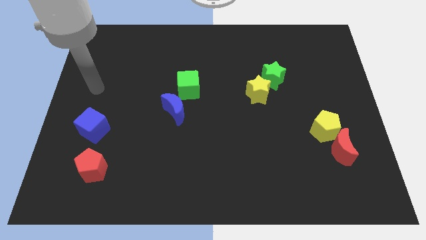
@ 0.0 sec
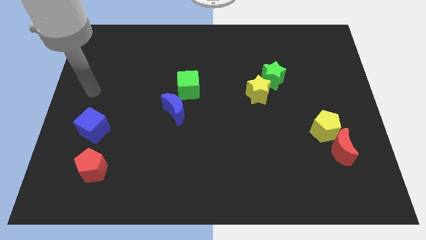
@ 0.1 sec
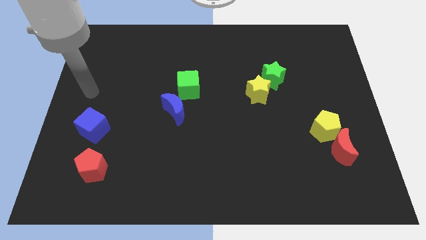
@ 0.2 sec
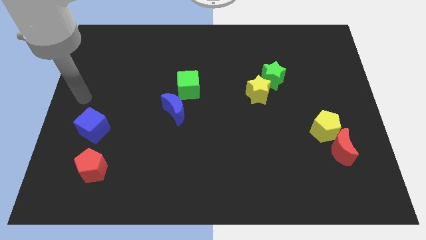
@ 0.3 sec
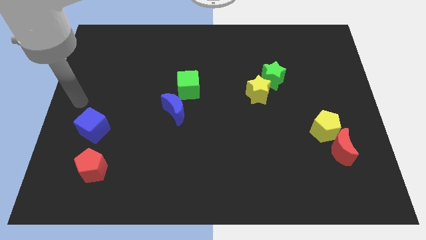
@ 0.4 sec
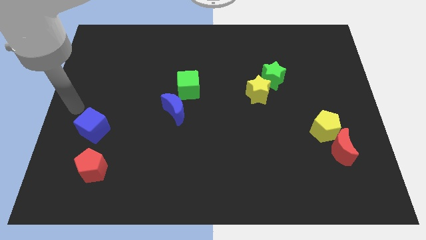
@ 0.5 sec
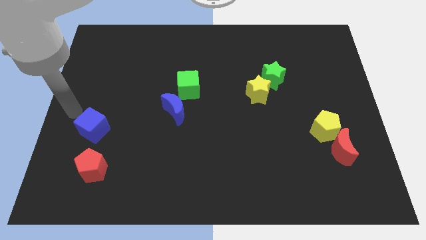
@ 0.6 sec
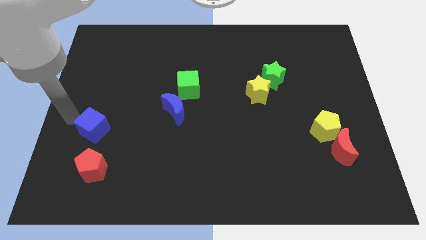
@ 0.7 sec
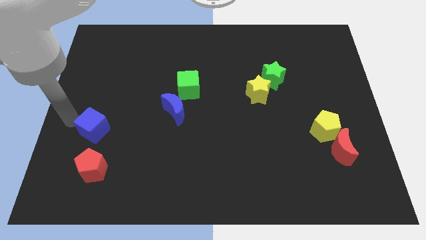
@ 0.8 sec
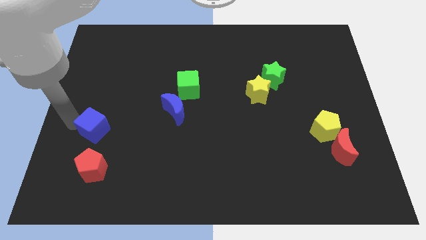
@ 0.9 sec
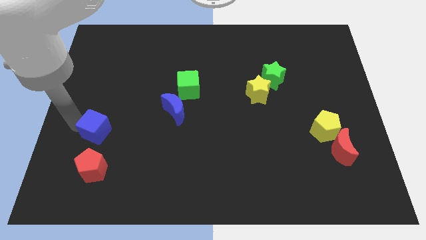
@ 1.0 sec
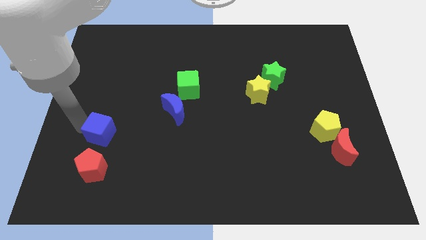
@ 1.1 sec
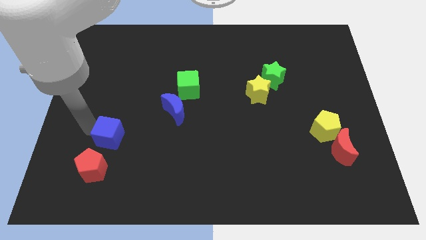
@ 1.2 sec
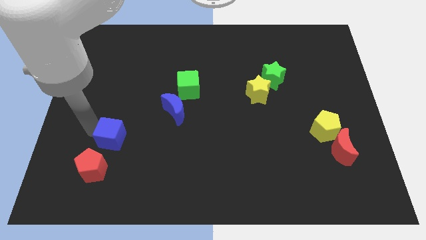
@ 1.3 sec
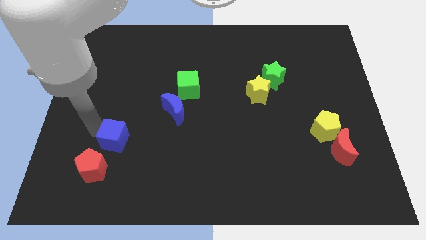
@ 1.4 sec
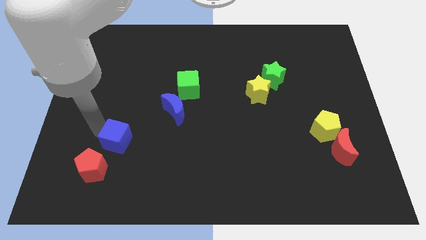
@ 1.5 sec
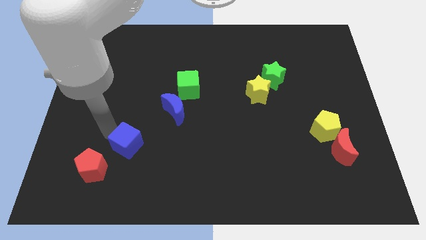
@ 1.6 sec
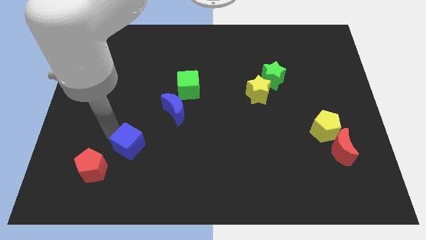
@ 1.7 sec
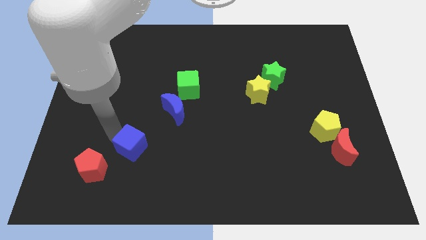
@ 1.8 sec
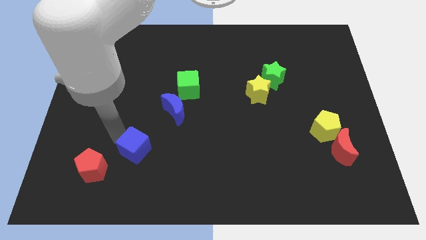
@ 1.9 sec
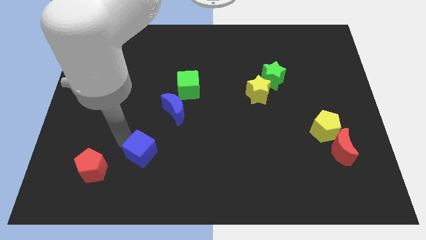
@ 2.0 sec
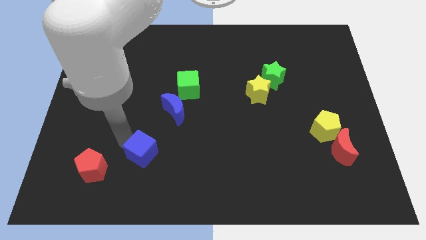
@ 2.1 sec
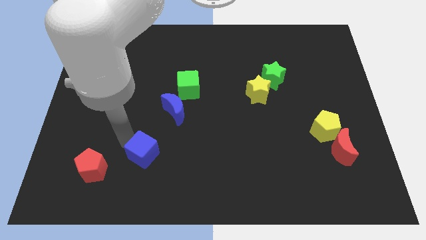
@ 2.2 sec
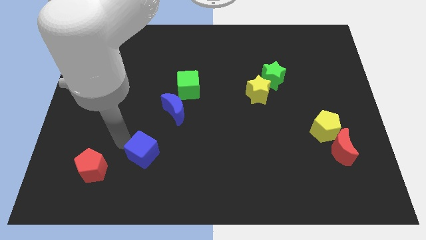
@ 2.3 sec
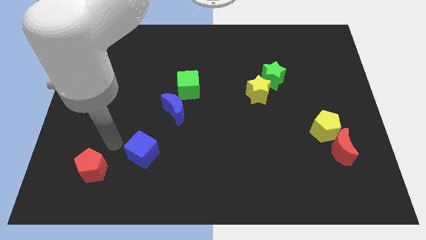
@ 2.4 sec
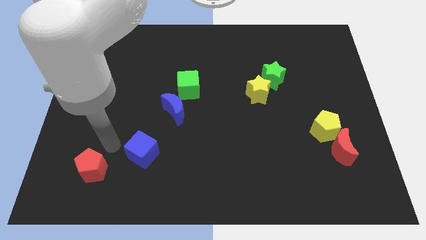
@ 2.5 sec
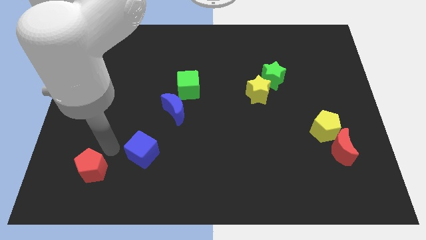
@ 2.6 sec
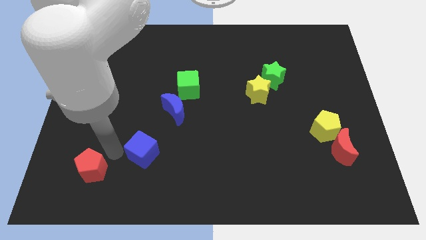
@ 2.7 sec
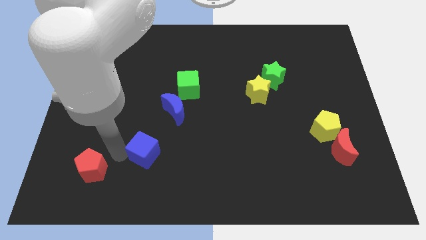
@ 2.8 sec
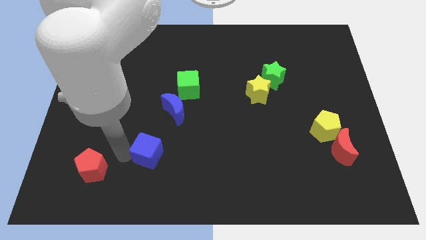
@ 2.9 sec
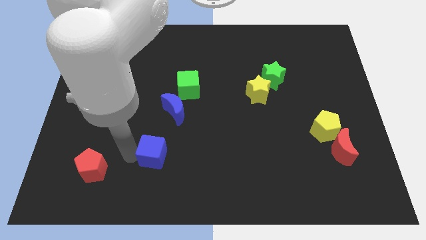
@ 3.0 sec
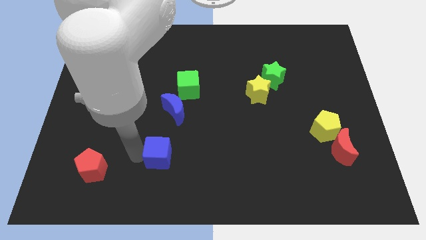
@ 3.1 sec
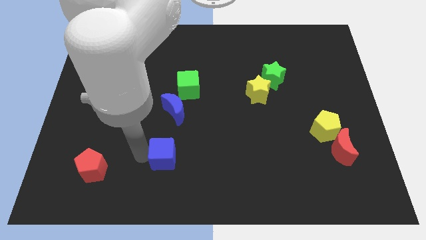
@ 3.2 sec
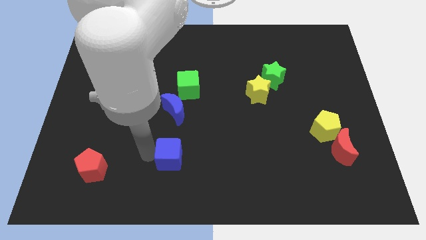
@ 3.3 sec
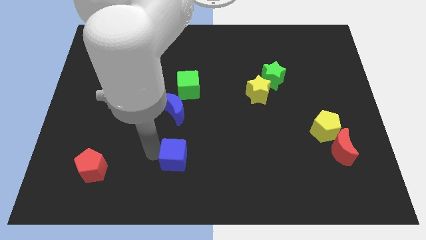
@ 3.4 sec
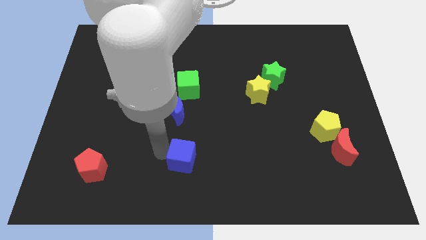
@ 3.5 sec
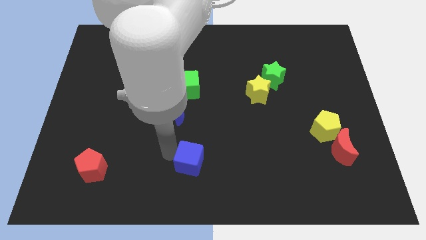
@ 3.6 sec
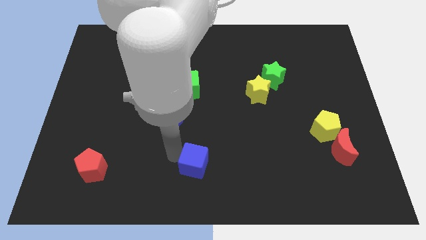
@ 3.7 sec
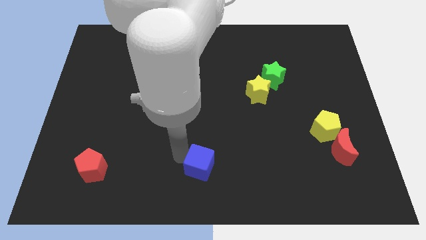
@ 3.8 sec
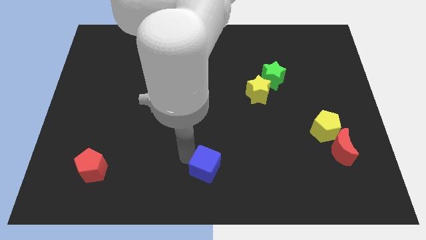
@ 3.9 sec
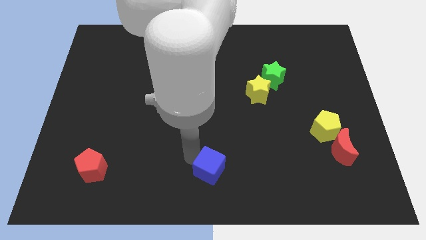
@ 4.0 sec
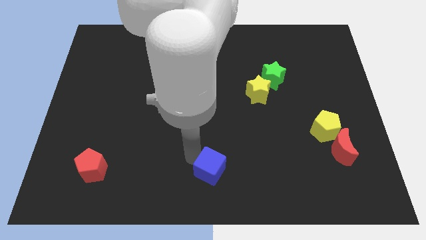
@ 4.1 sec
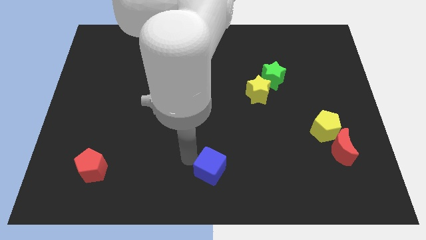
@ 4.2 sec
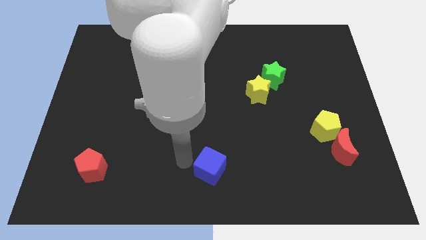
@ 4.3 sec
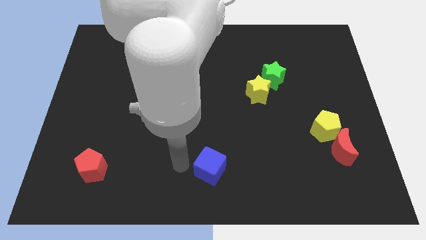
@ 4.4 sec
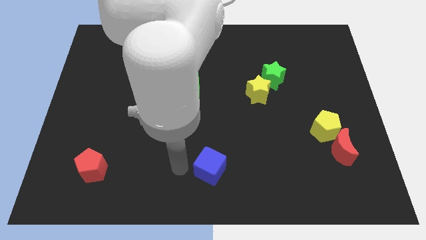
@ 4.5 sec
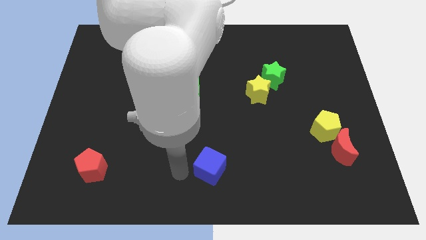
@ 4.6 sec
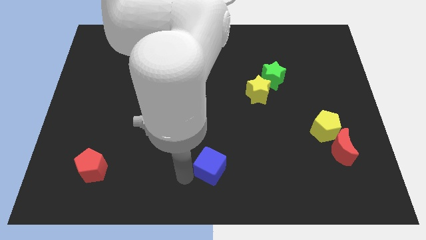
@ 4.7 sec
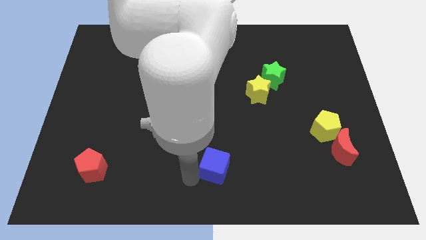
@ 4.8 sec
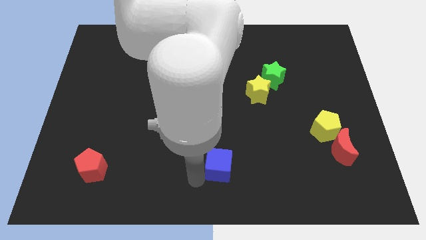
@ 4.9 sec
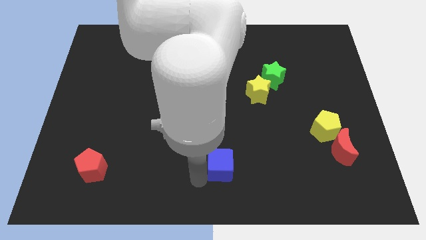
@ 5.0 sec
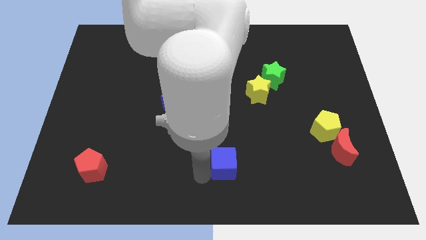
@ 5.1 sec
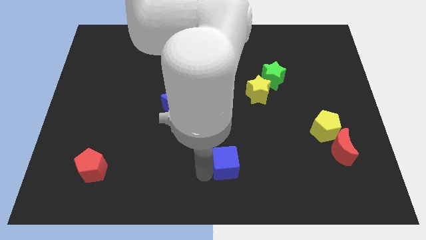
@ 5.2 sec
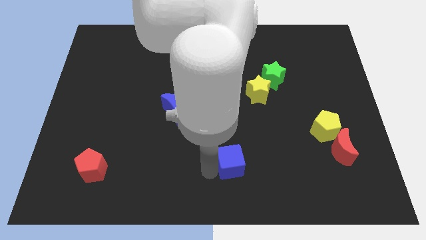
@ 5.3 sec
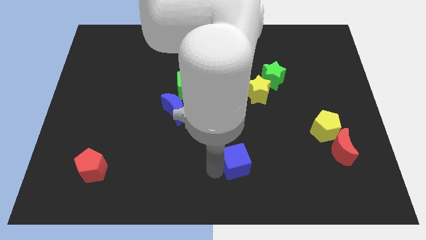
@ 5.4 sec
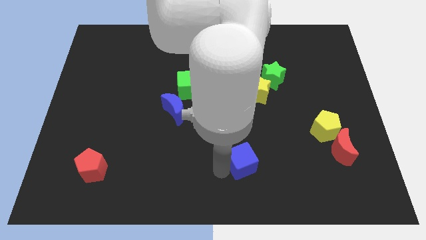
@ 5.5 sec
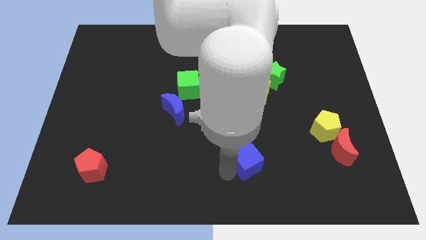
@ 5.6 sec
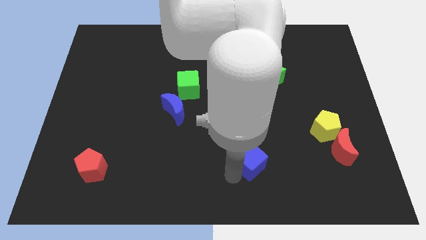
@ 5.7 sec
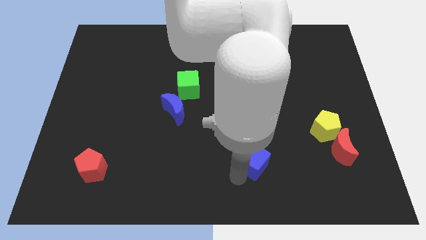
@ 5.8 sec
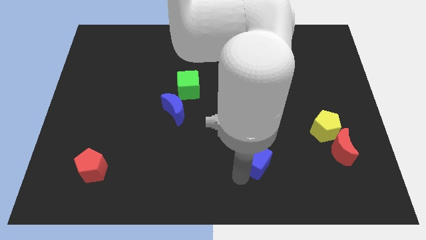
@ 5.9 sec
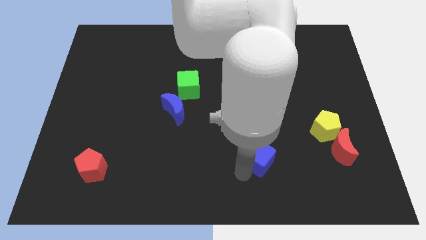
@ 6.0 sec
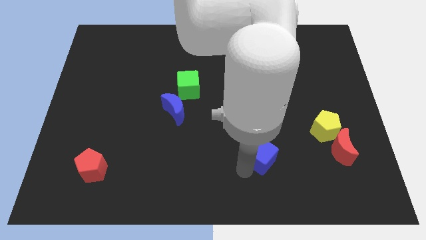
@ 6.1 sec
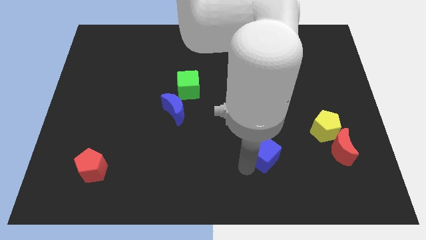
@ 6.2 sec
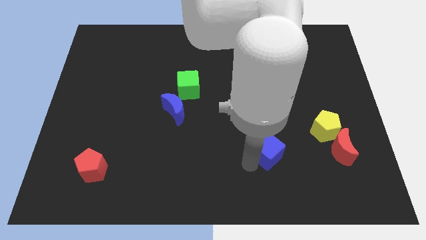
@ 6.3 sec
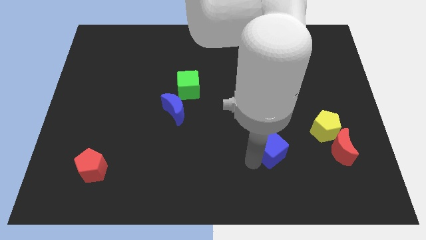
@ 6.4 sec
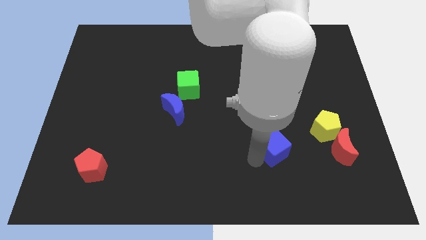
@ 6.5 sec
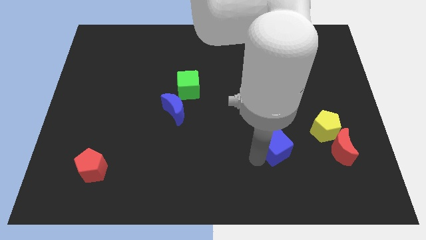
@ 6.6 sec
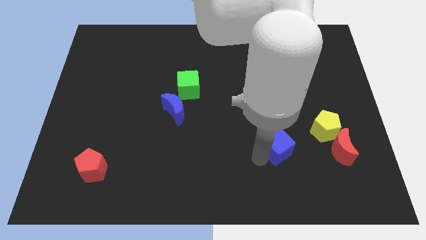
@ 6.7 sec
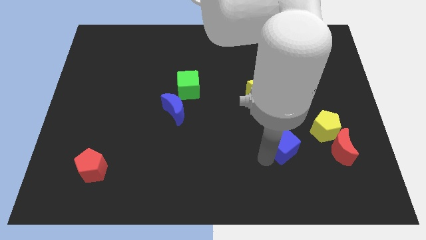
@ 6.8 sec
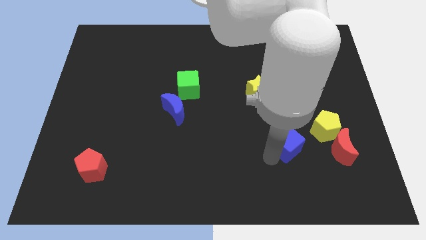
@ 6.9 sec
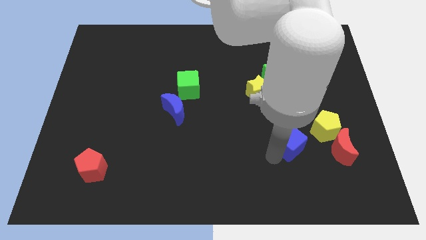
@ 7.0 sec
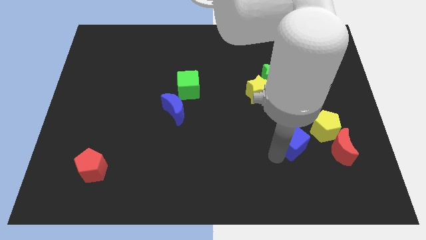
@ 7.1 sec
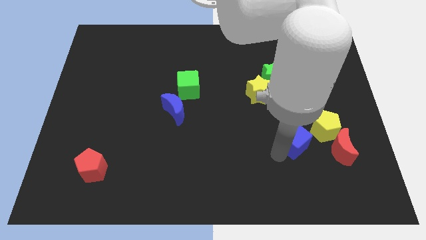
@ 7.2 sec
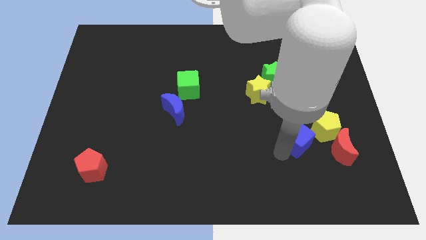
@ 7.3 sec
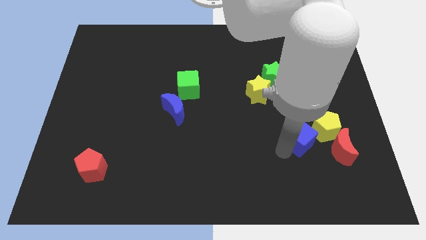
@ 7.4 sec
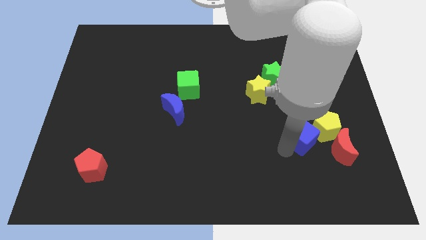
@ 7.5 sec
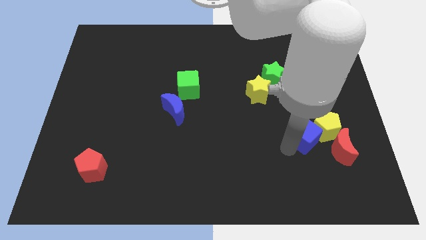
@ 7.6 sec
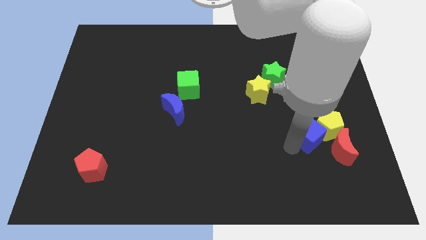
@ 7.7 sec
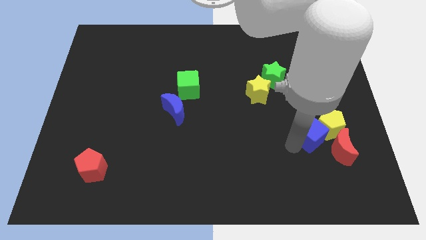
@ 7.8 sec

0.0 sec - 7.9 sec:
push the blue cube next to the yellow pentagon

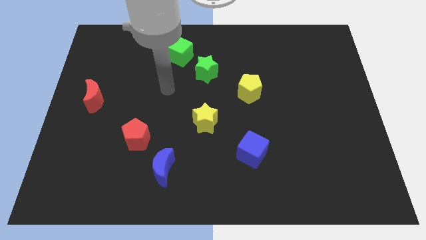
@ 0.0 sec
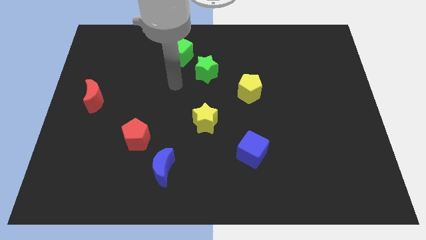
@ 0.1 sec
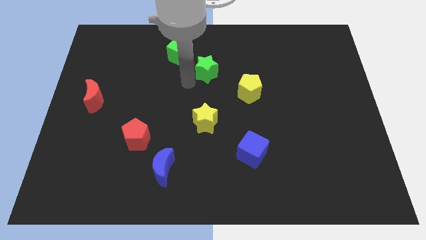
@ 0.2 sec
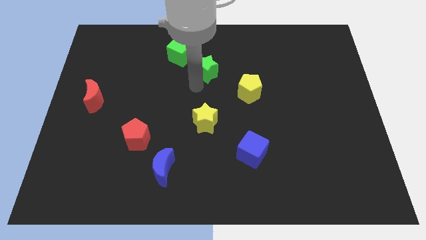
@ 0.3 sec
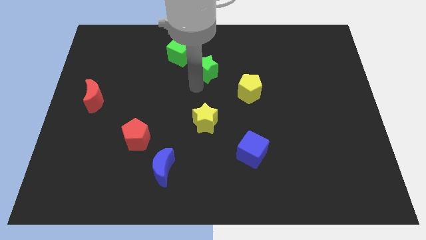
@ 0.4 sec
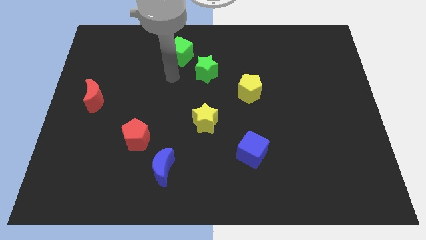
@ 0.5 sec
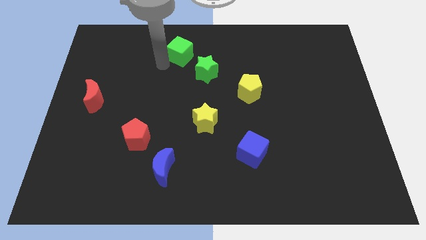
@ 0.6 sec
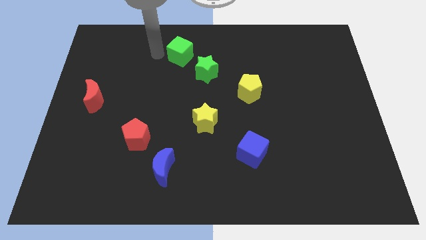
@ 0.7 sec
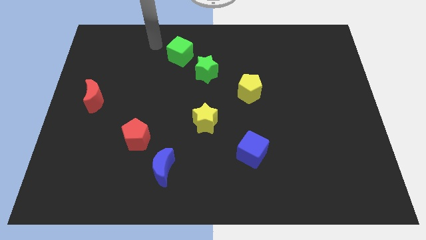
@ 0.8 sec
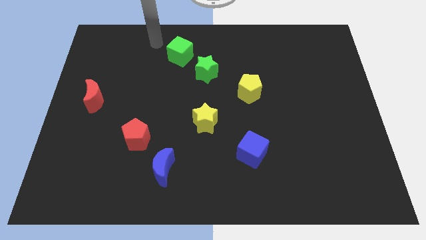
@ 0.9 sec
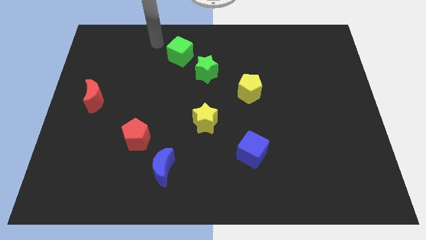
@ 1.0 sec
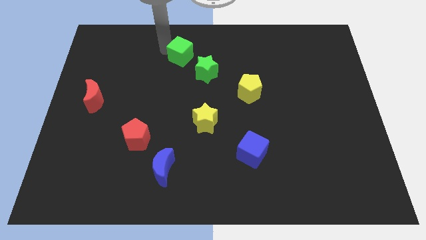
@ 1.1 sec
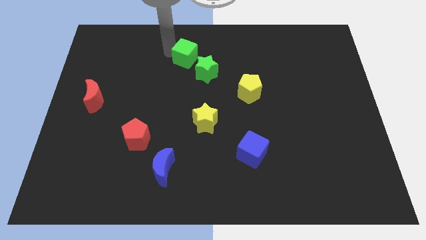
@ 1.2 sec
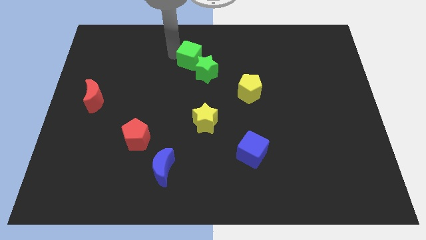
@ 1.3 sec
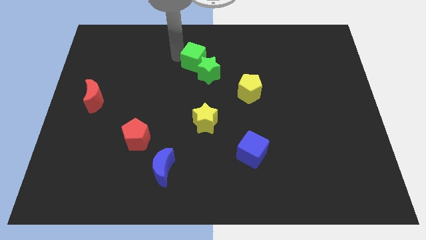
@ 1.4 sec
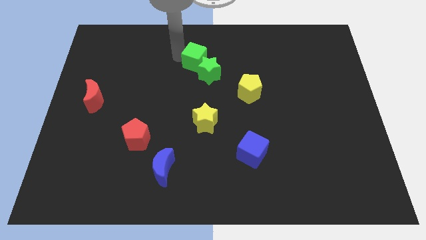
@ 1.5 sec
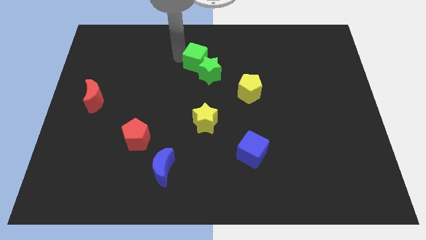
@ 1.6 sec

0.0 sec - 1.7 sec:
put the green cube next to the green star
